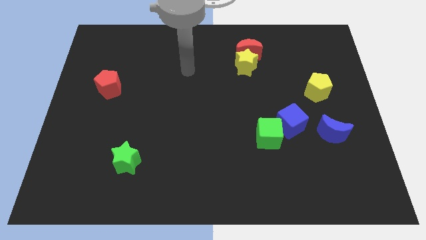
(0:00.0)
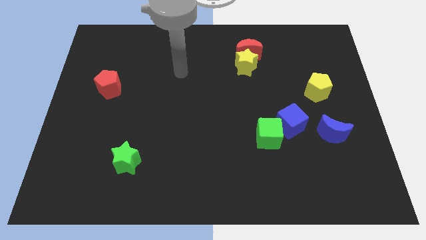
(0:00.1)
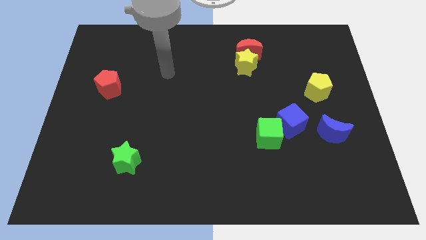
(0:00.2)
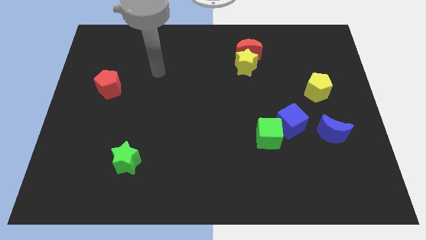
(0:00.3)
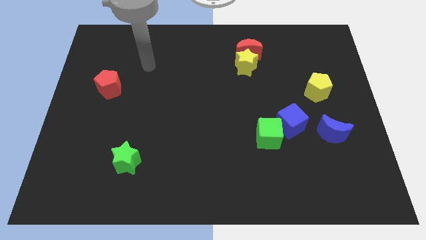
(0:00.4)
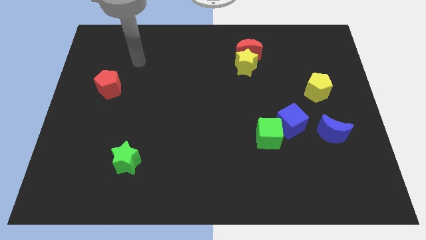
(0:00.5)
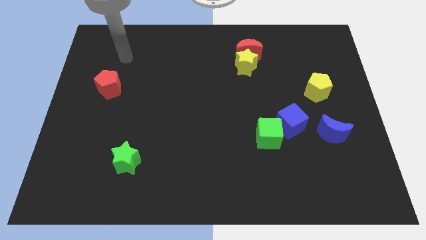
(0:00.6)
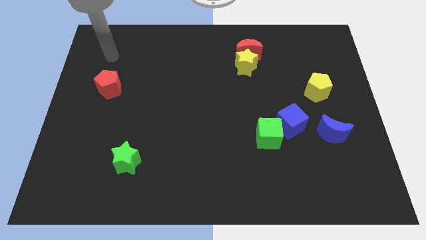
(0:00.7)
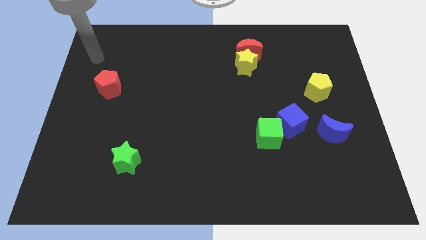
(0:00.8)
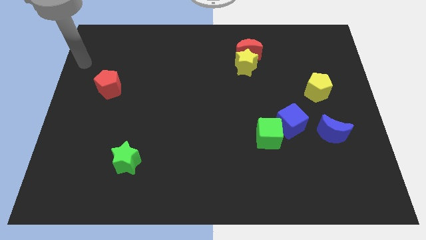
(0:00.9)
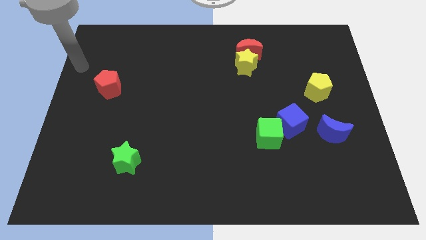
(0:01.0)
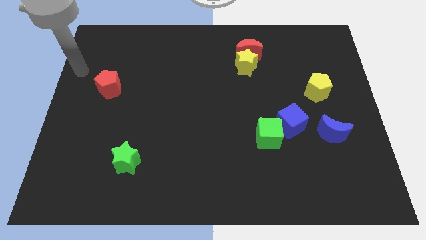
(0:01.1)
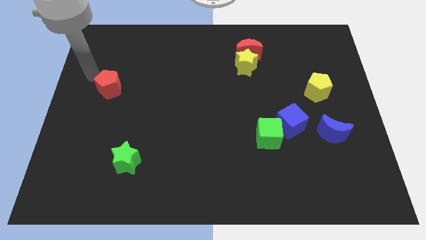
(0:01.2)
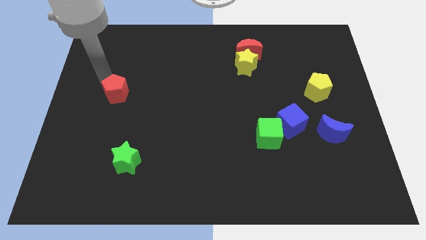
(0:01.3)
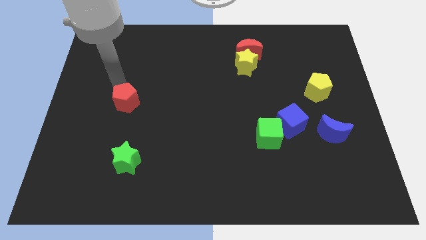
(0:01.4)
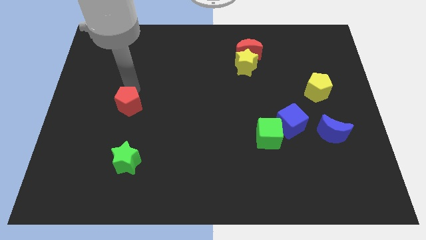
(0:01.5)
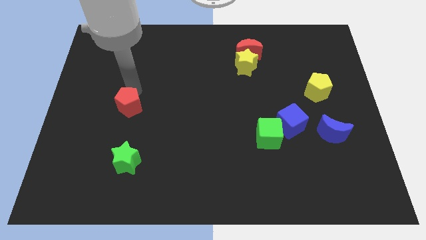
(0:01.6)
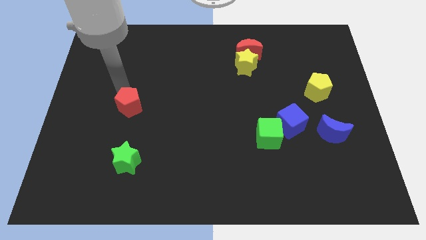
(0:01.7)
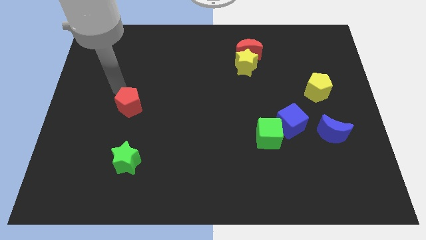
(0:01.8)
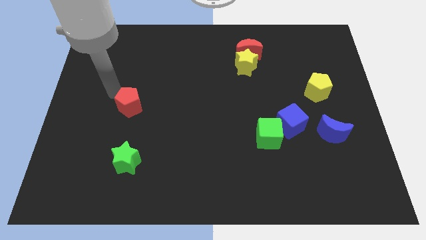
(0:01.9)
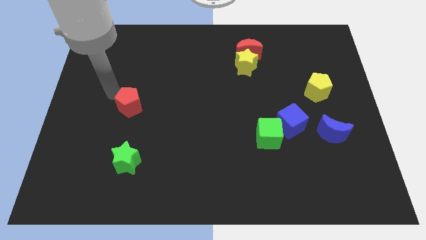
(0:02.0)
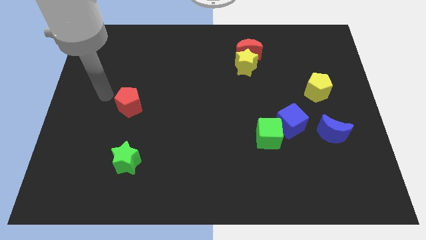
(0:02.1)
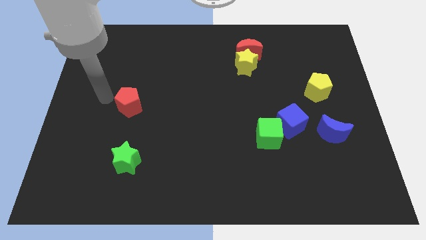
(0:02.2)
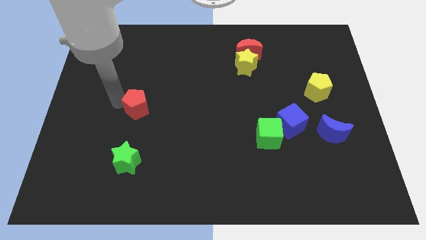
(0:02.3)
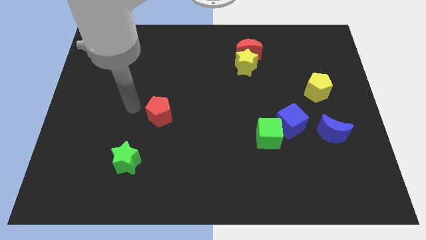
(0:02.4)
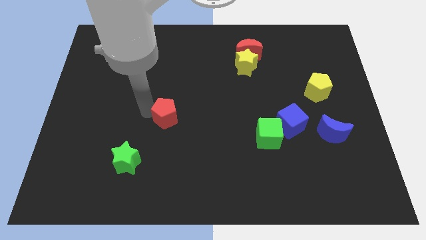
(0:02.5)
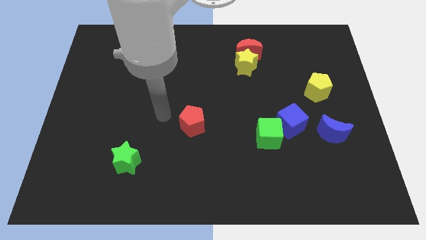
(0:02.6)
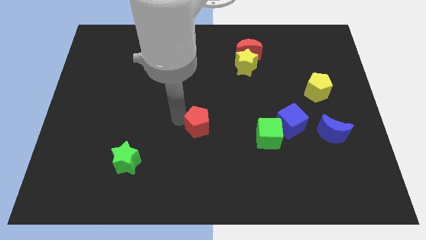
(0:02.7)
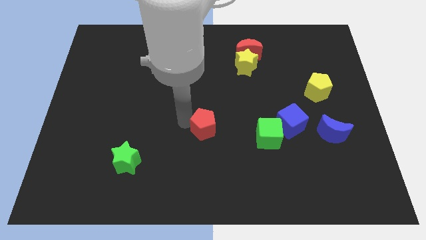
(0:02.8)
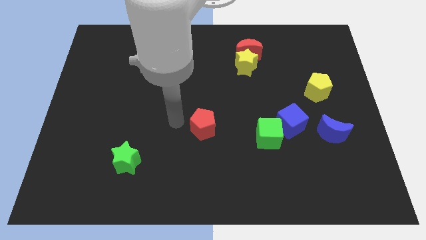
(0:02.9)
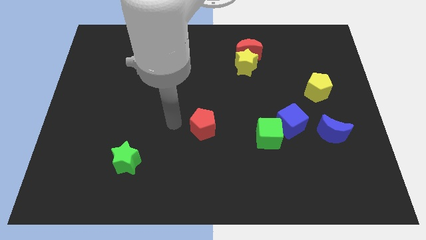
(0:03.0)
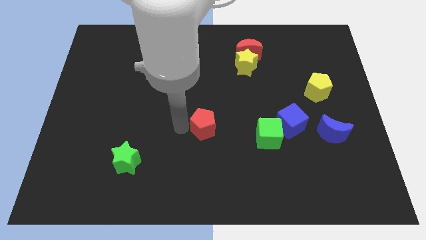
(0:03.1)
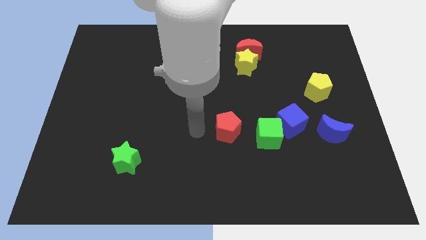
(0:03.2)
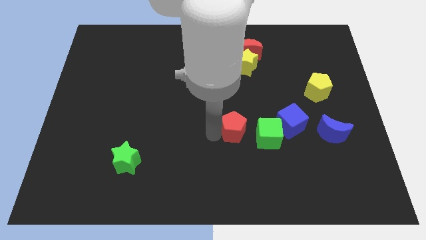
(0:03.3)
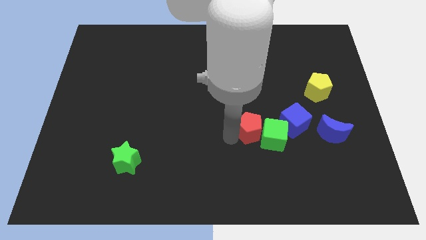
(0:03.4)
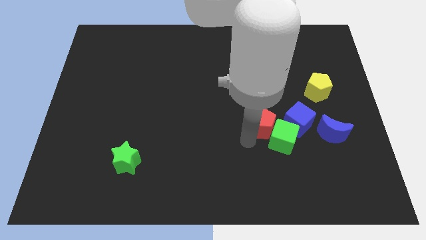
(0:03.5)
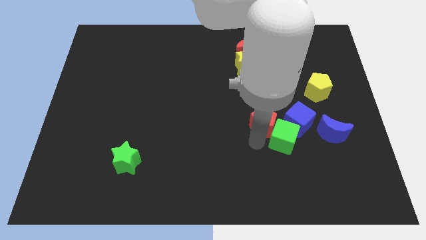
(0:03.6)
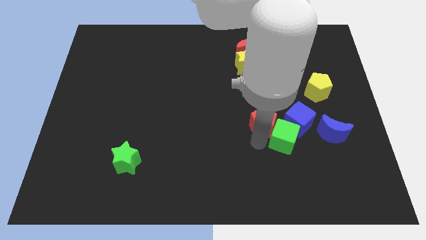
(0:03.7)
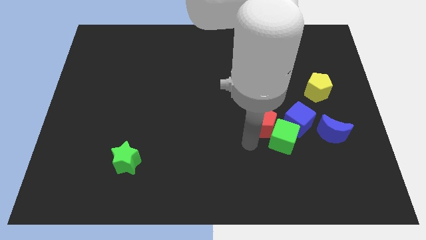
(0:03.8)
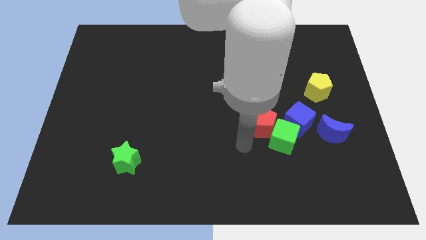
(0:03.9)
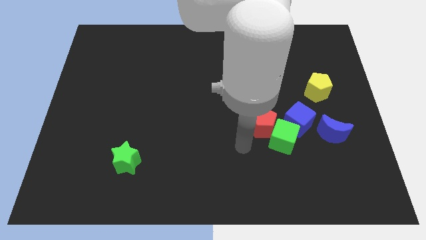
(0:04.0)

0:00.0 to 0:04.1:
push the red pentagon into green cube

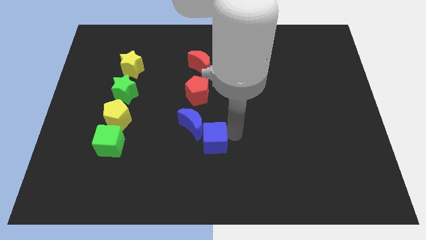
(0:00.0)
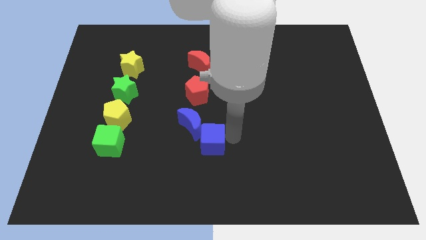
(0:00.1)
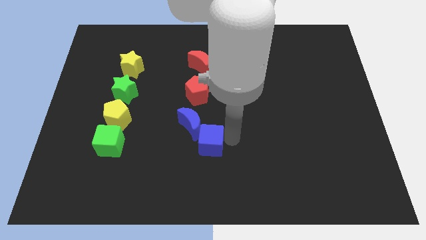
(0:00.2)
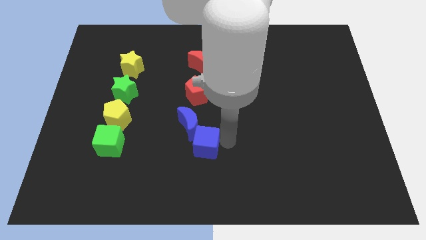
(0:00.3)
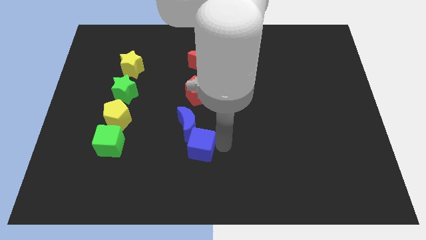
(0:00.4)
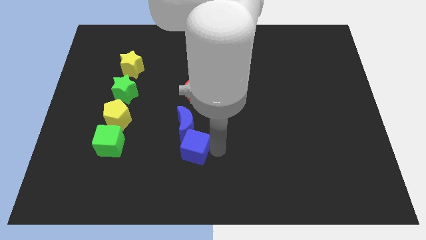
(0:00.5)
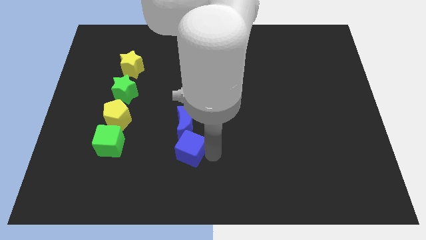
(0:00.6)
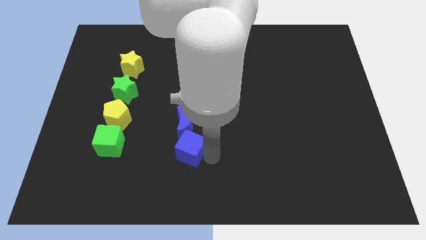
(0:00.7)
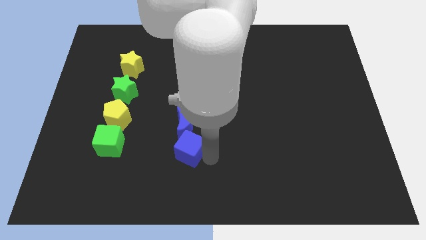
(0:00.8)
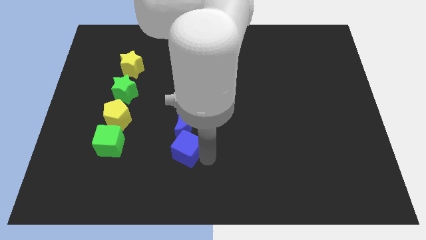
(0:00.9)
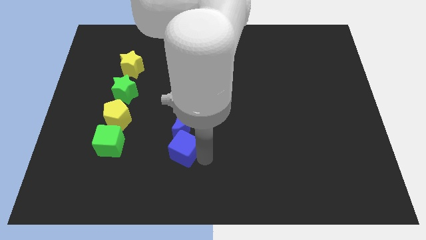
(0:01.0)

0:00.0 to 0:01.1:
place the blue cube below the blue crescent

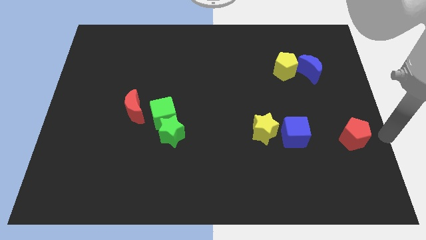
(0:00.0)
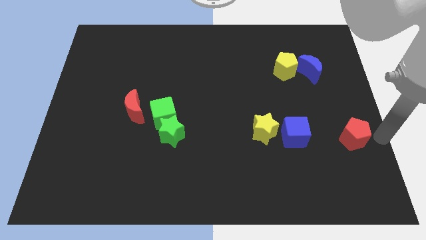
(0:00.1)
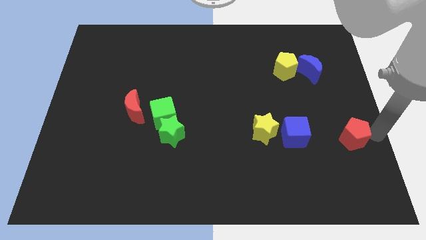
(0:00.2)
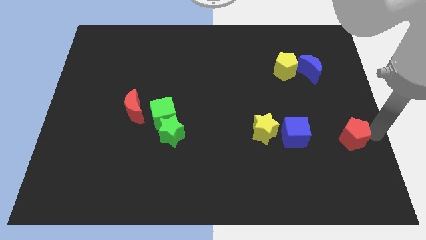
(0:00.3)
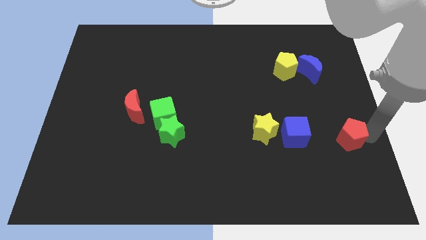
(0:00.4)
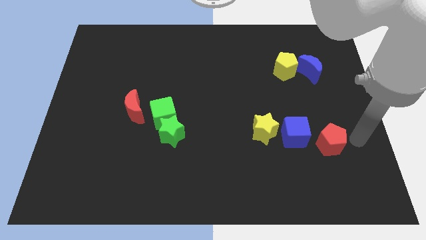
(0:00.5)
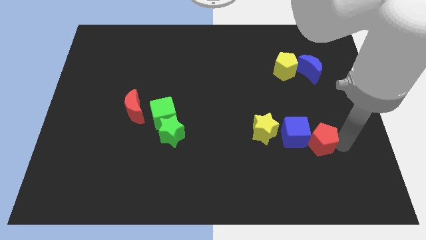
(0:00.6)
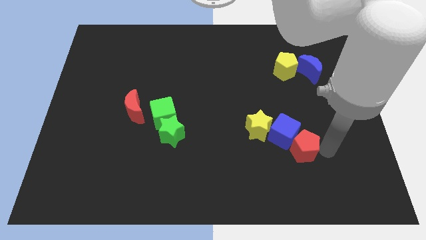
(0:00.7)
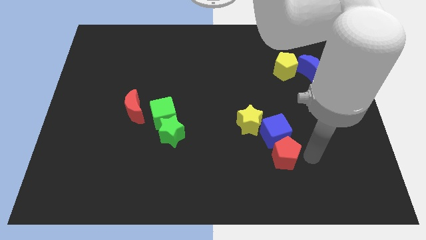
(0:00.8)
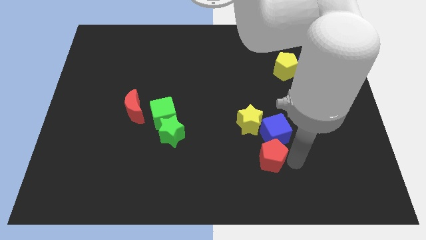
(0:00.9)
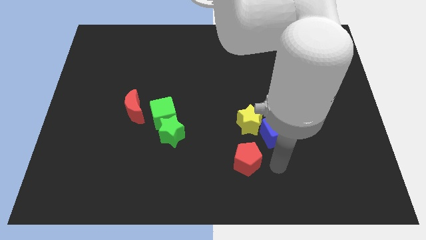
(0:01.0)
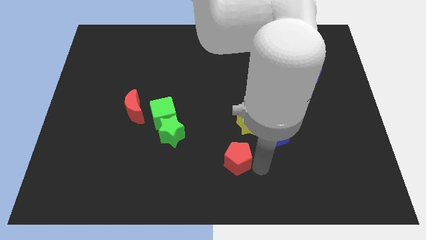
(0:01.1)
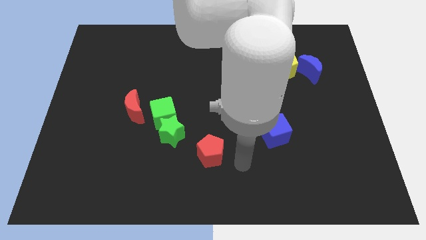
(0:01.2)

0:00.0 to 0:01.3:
move the red pentagon to the bottom right diagonal of the green star

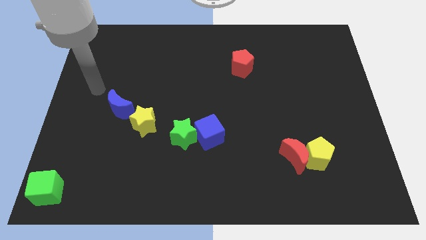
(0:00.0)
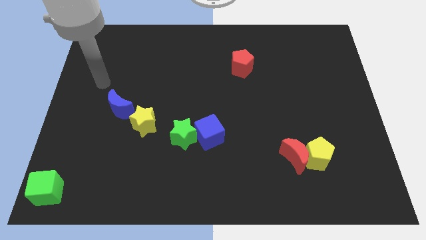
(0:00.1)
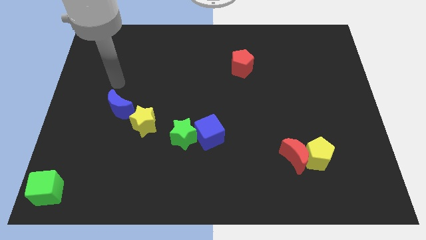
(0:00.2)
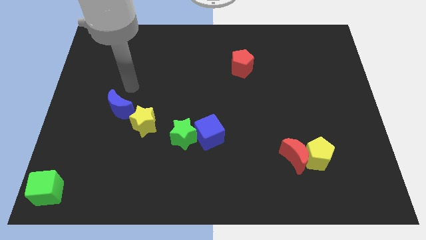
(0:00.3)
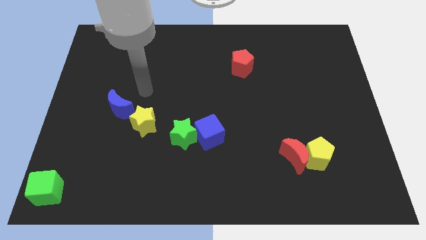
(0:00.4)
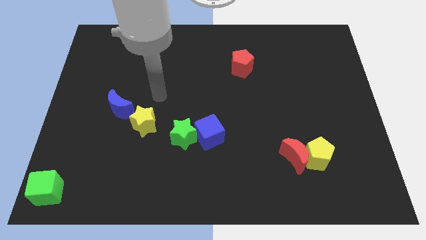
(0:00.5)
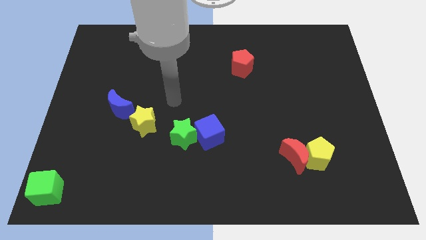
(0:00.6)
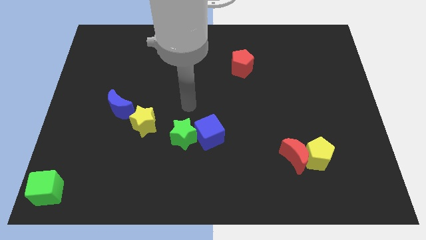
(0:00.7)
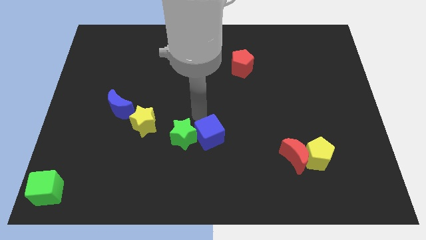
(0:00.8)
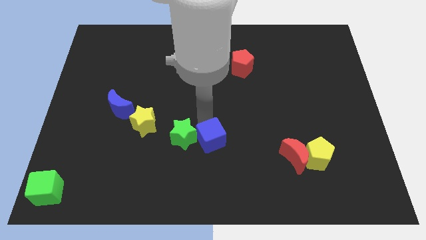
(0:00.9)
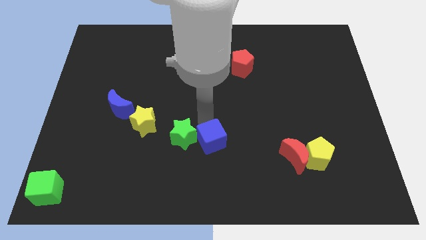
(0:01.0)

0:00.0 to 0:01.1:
move your arm to the top of the blue cube

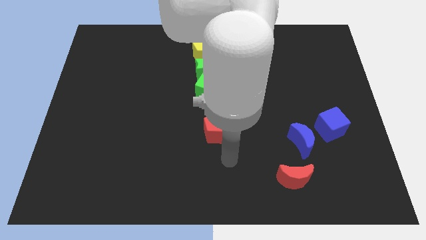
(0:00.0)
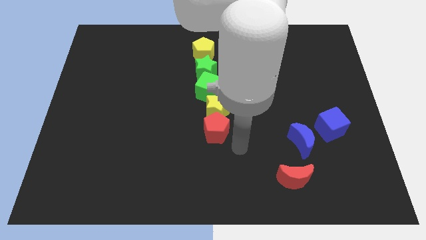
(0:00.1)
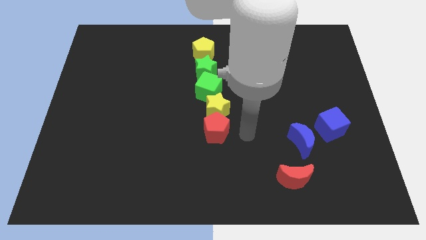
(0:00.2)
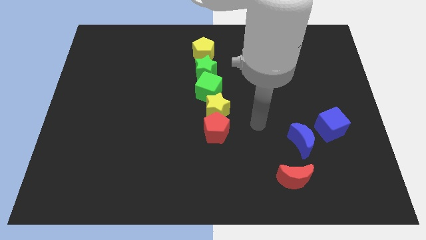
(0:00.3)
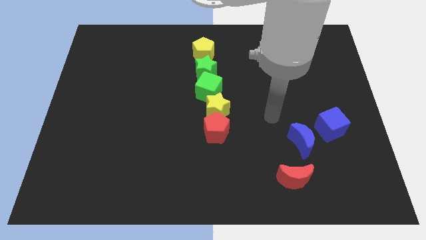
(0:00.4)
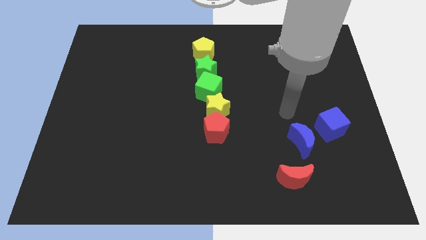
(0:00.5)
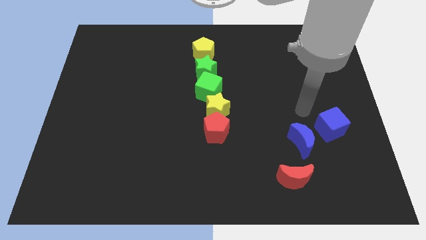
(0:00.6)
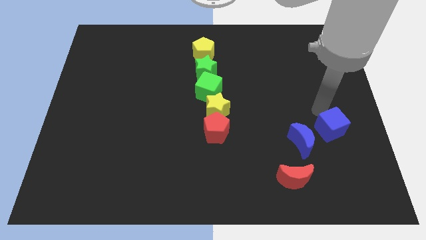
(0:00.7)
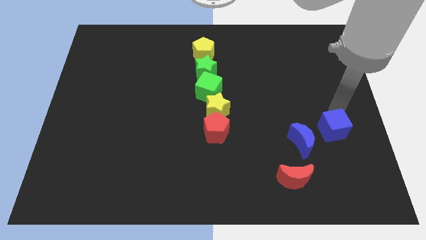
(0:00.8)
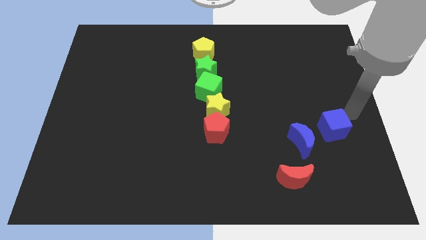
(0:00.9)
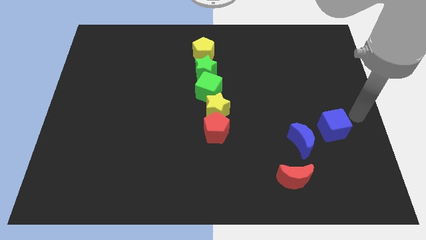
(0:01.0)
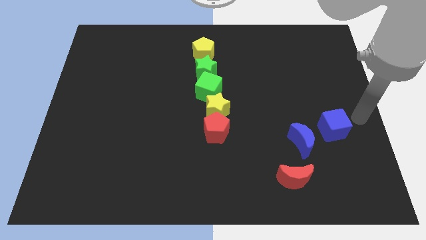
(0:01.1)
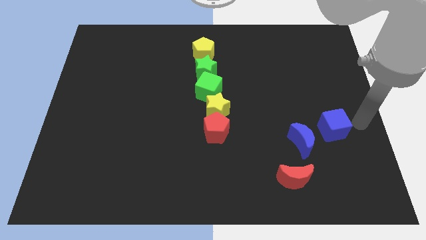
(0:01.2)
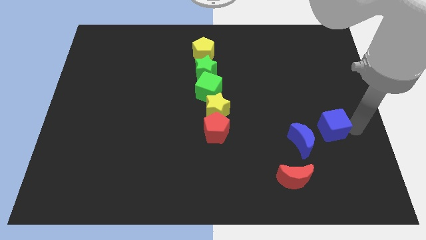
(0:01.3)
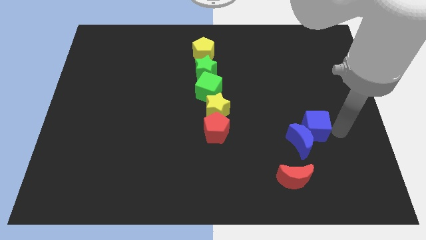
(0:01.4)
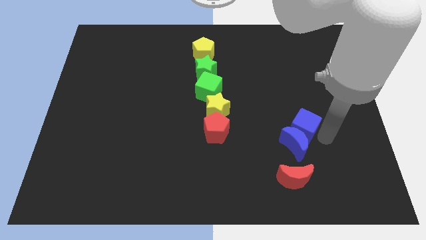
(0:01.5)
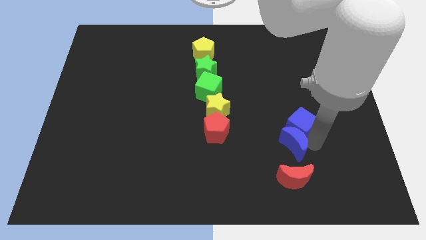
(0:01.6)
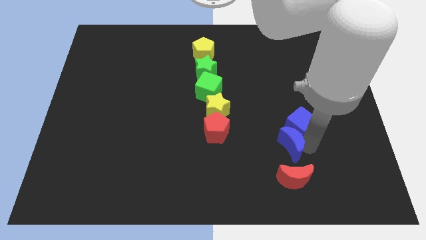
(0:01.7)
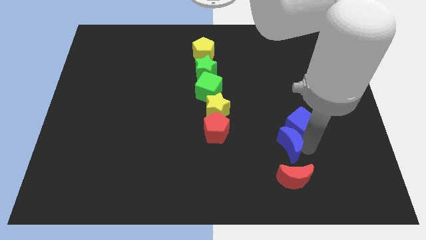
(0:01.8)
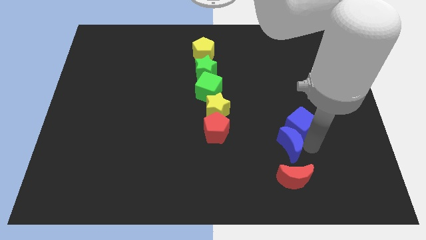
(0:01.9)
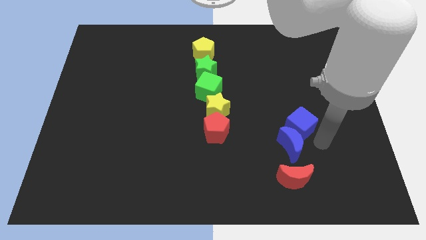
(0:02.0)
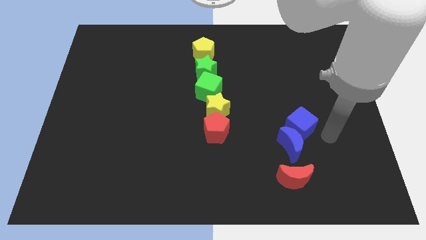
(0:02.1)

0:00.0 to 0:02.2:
push the blue cube into blue moon diagonal right
